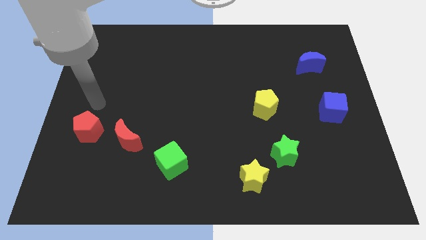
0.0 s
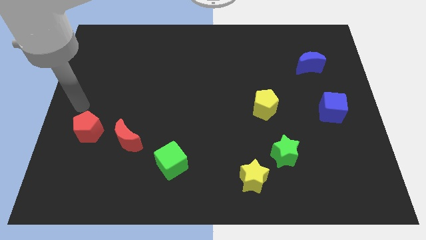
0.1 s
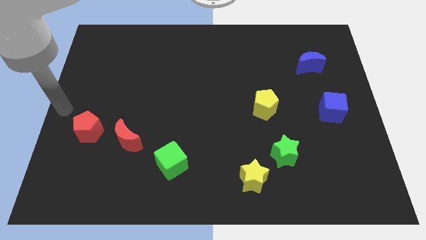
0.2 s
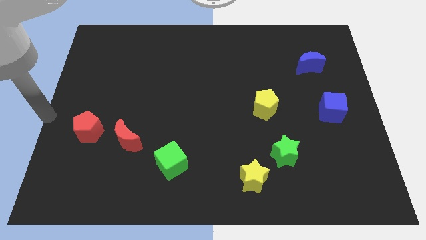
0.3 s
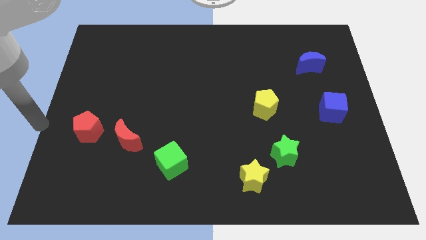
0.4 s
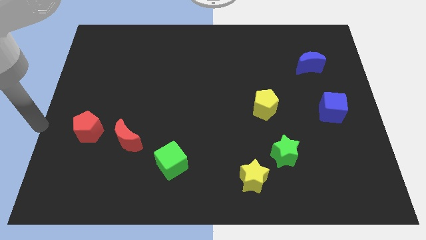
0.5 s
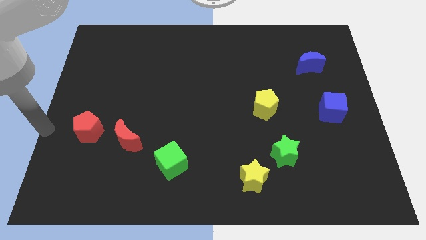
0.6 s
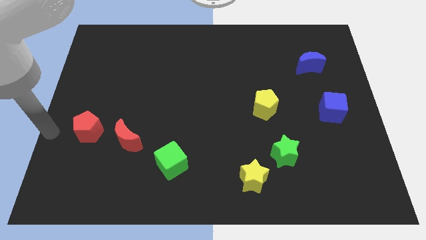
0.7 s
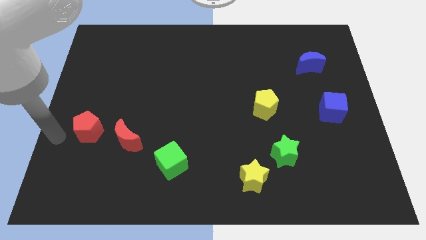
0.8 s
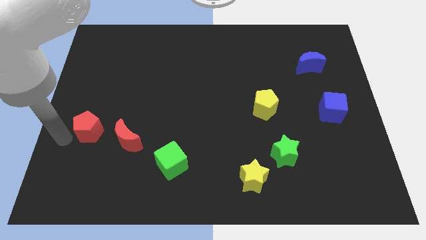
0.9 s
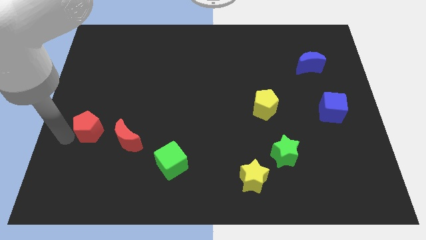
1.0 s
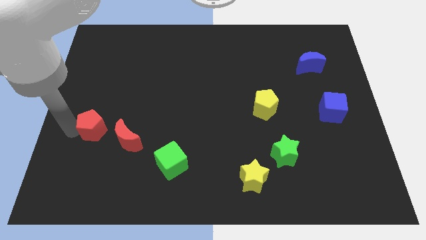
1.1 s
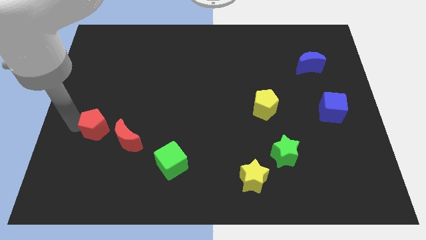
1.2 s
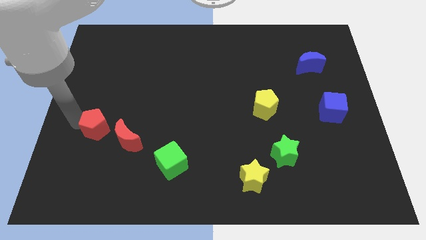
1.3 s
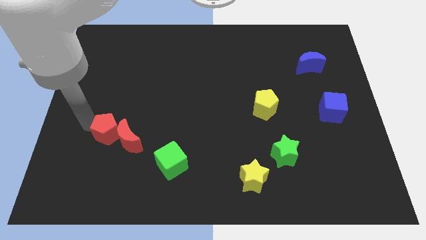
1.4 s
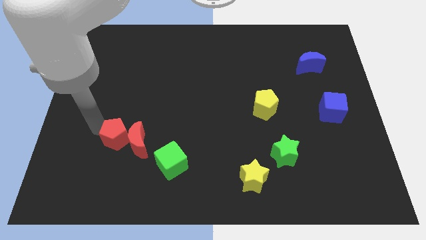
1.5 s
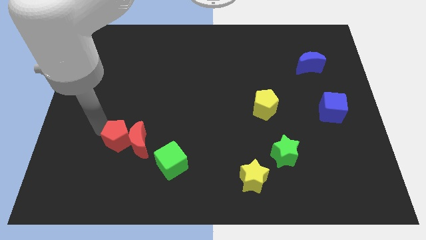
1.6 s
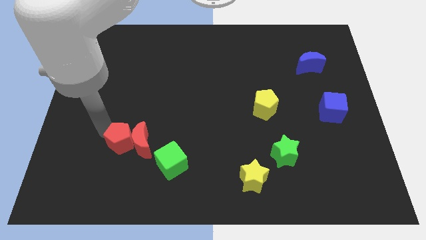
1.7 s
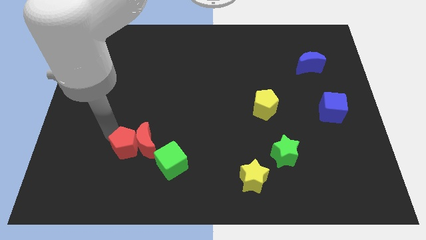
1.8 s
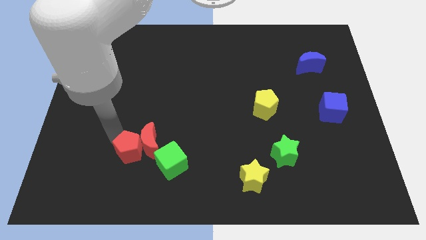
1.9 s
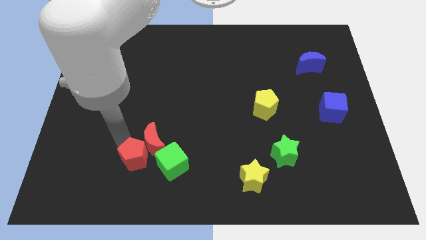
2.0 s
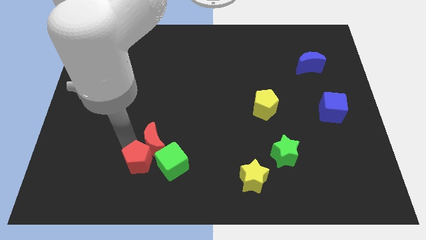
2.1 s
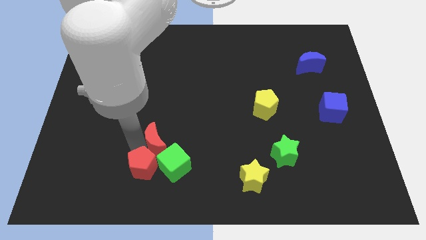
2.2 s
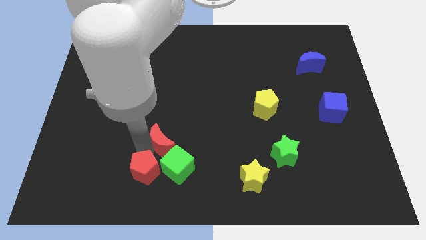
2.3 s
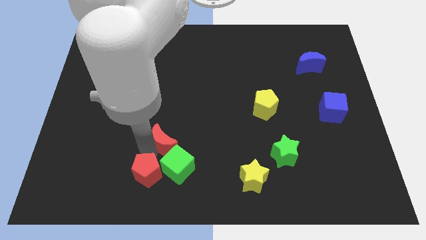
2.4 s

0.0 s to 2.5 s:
push the red pentagon close left to the green cube along with the red crescent

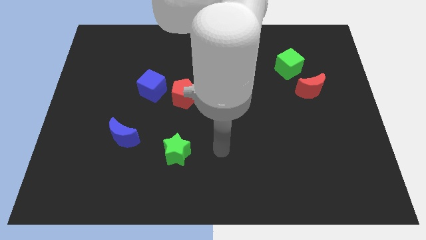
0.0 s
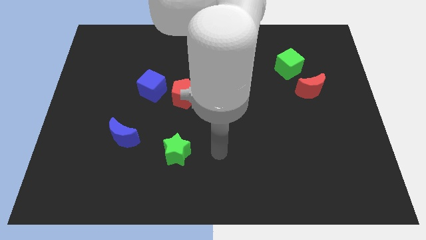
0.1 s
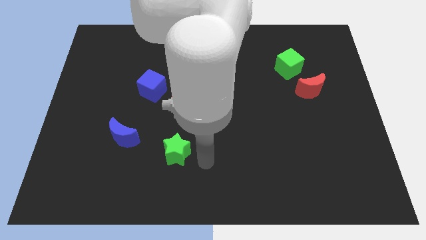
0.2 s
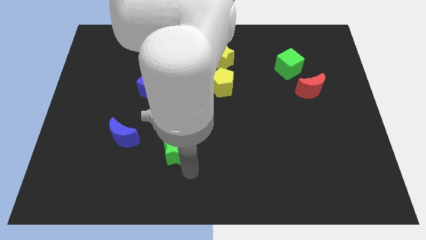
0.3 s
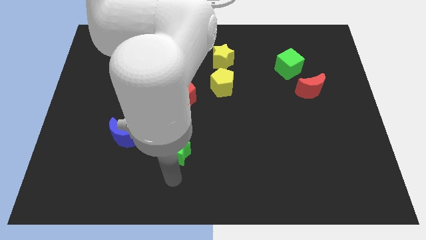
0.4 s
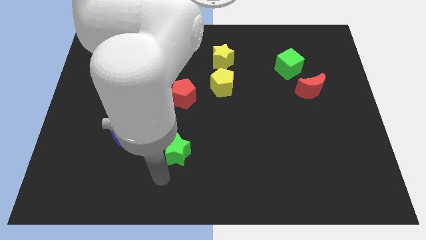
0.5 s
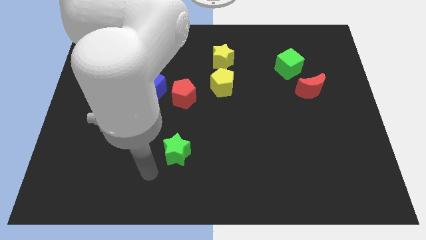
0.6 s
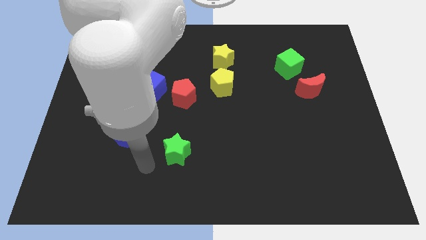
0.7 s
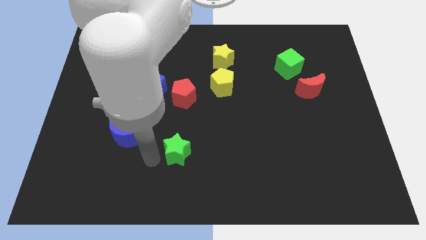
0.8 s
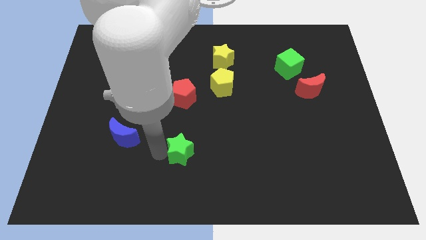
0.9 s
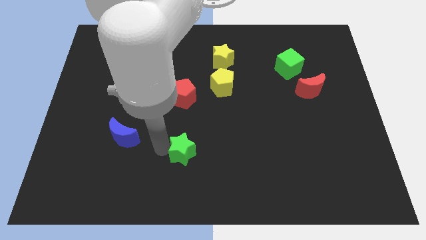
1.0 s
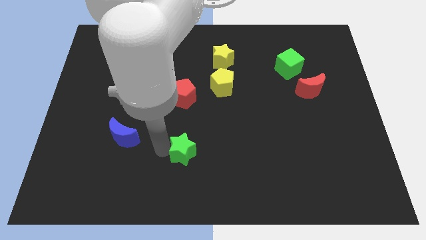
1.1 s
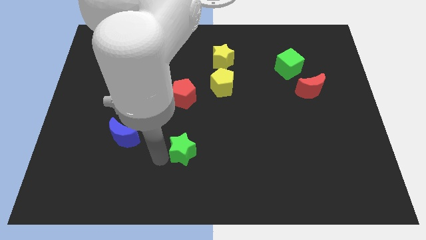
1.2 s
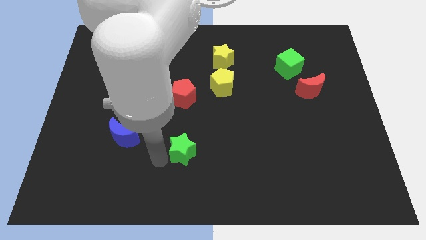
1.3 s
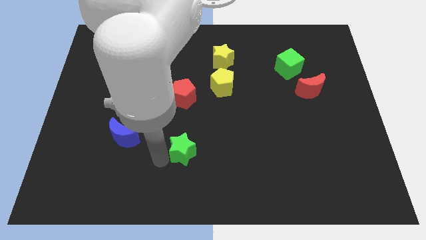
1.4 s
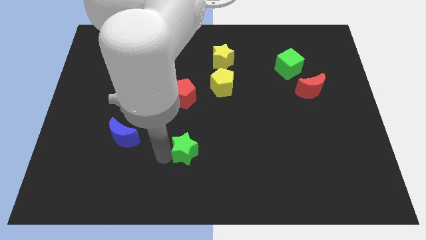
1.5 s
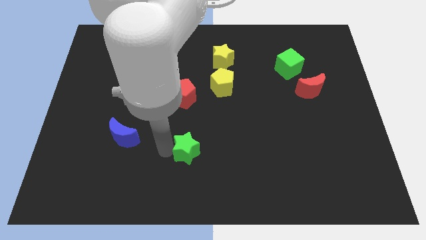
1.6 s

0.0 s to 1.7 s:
move the arm into the green star

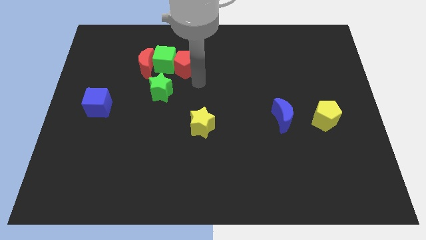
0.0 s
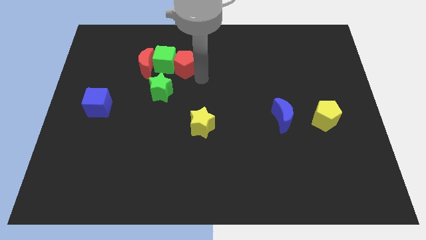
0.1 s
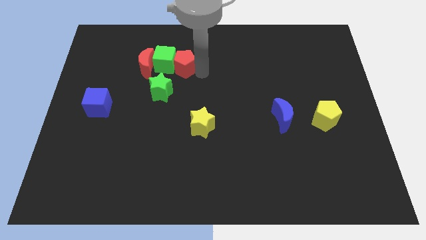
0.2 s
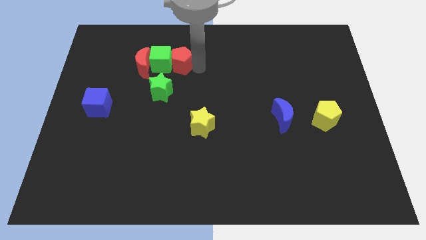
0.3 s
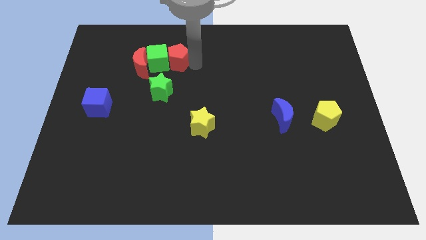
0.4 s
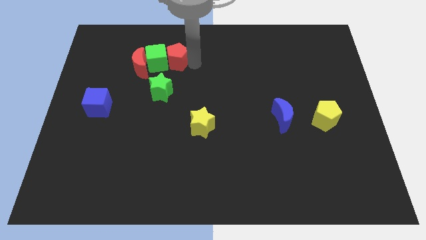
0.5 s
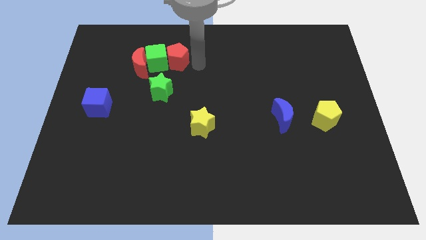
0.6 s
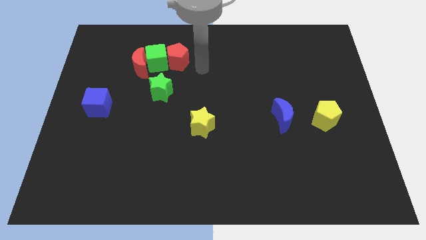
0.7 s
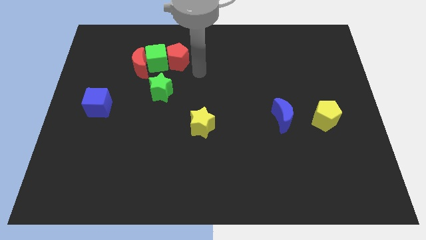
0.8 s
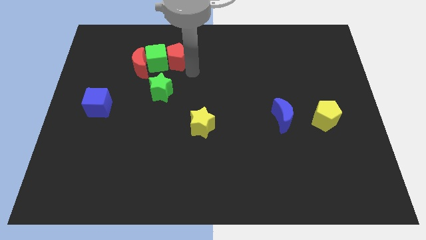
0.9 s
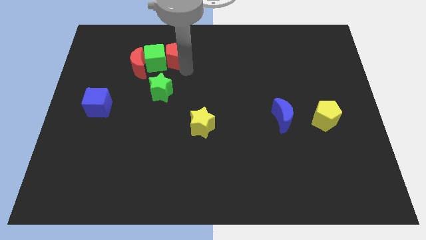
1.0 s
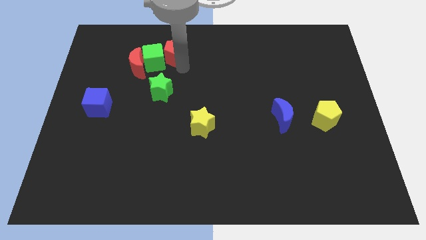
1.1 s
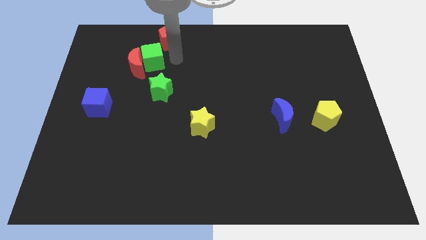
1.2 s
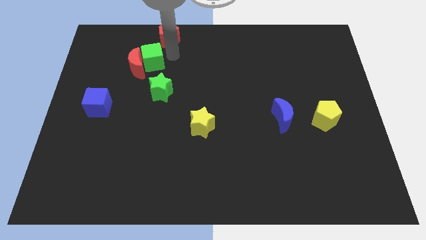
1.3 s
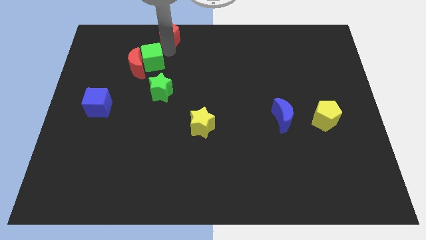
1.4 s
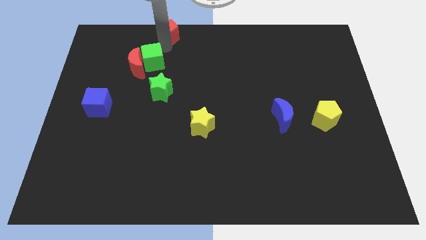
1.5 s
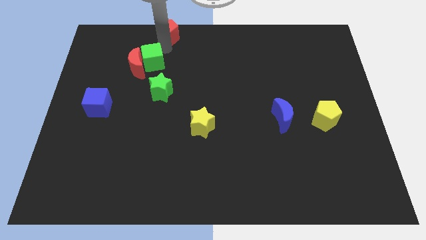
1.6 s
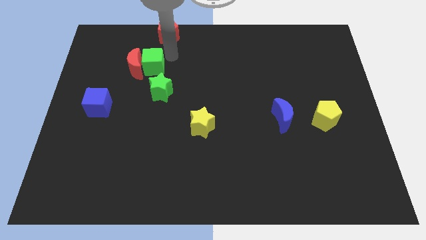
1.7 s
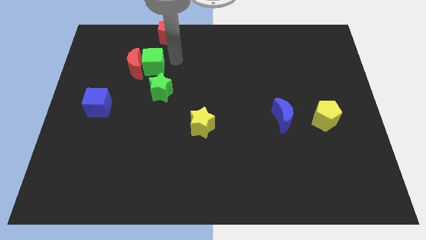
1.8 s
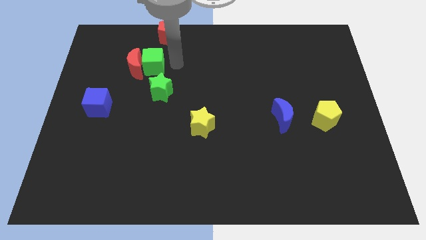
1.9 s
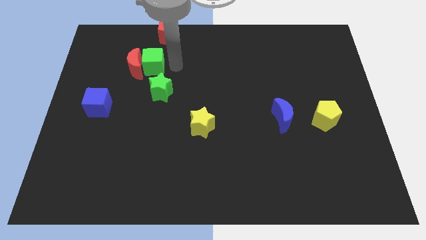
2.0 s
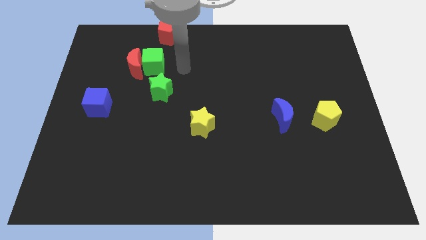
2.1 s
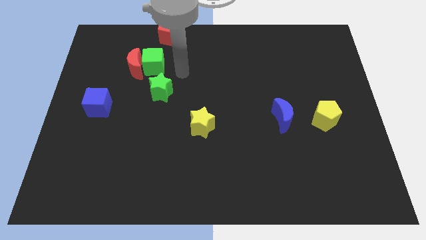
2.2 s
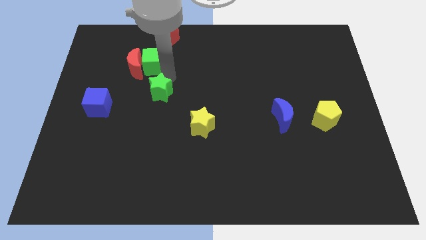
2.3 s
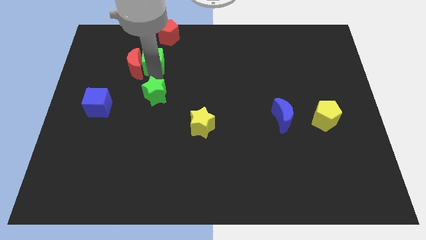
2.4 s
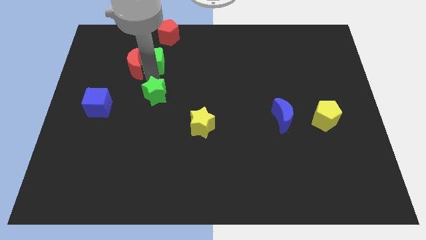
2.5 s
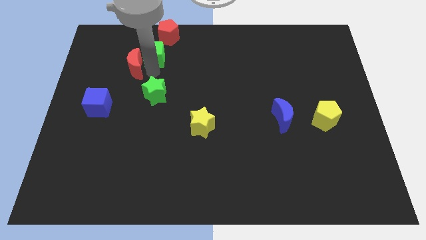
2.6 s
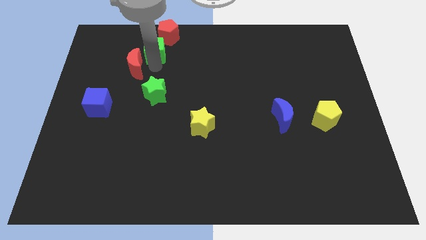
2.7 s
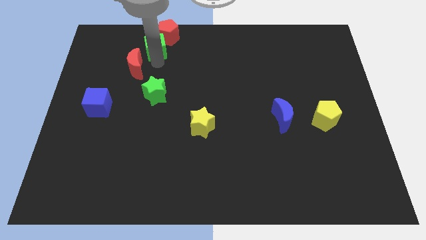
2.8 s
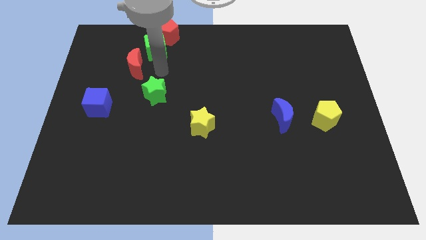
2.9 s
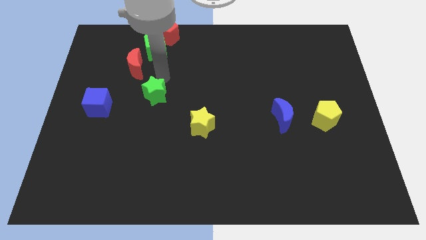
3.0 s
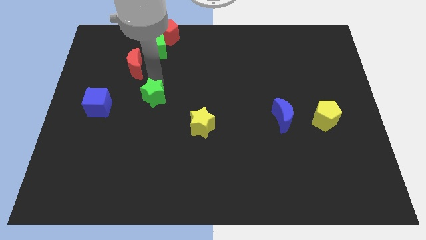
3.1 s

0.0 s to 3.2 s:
push red pentagon to the top of the board

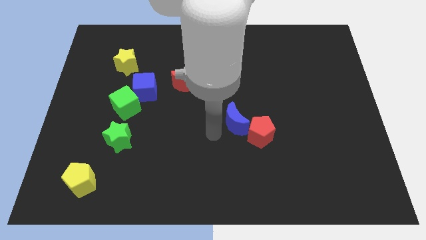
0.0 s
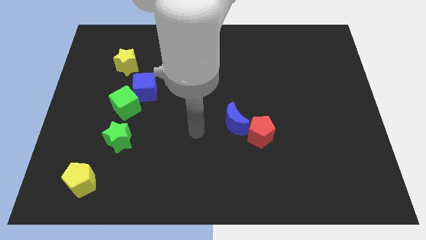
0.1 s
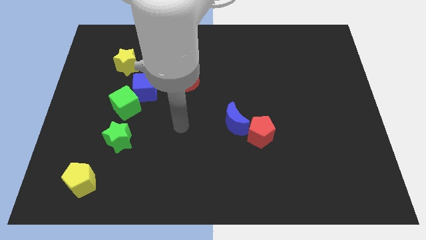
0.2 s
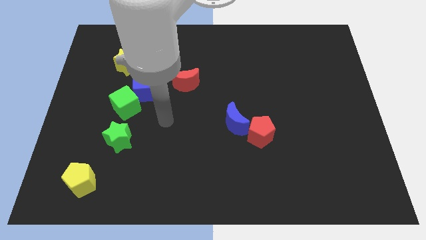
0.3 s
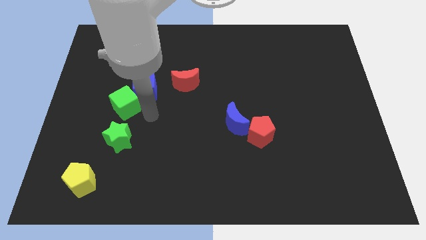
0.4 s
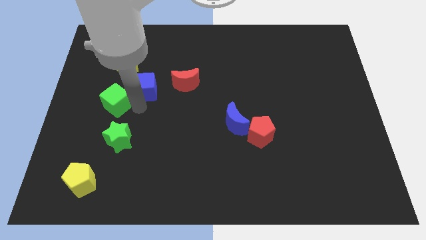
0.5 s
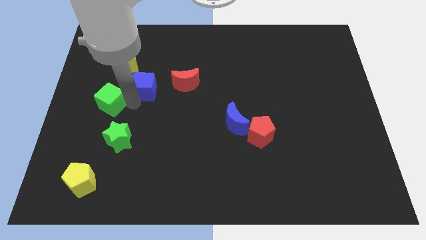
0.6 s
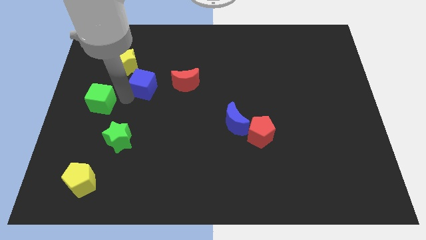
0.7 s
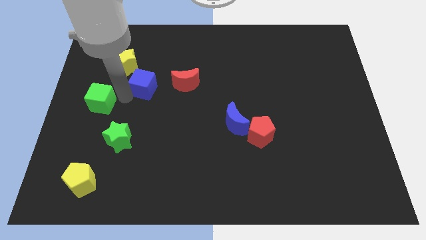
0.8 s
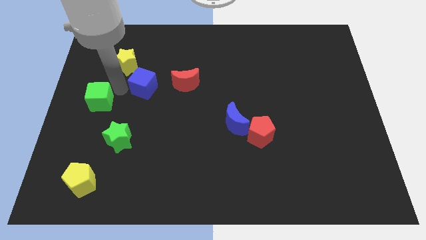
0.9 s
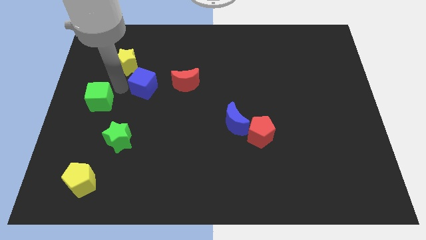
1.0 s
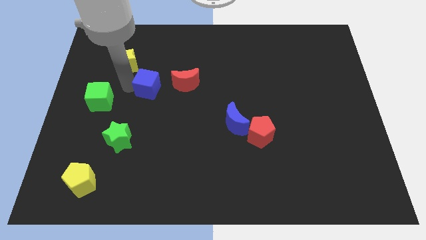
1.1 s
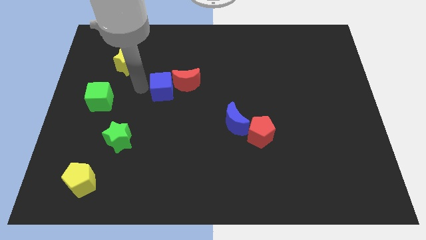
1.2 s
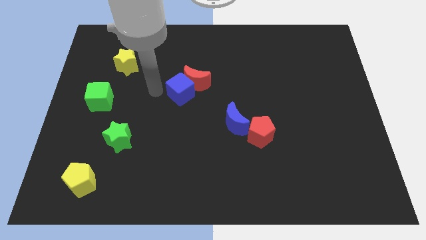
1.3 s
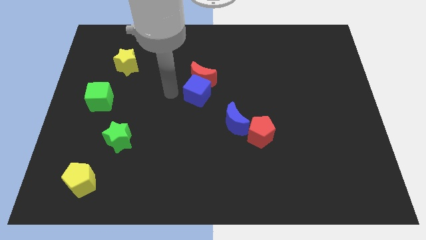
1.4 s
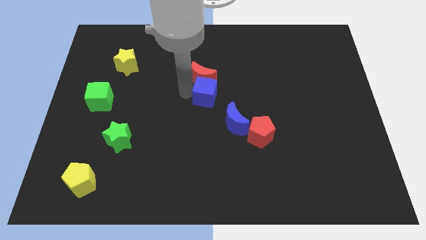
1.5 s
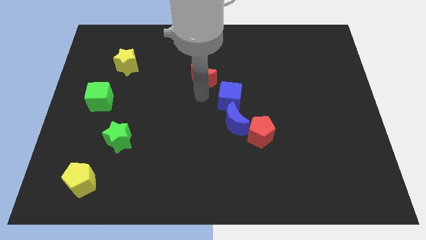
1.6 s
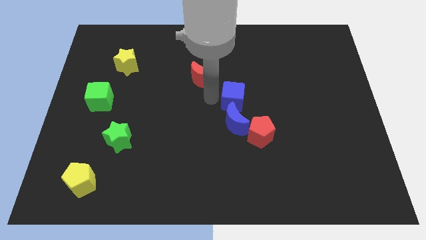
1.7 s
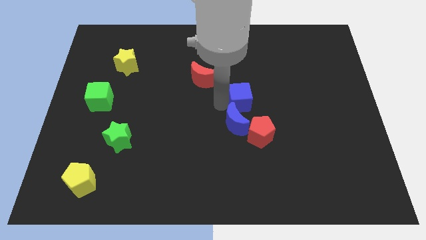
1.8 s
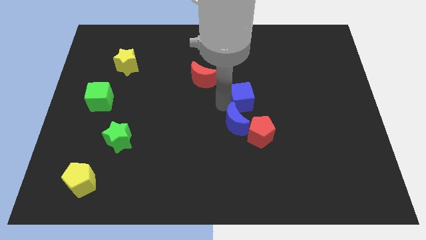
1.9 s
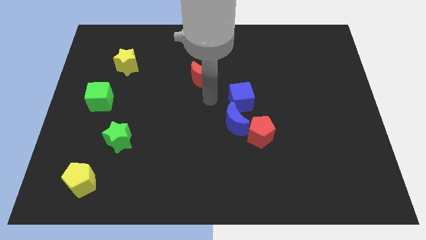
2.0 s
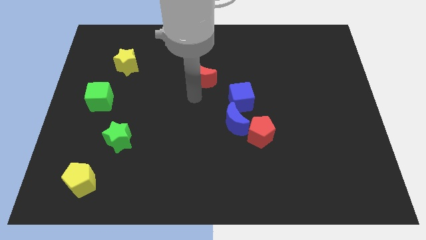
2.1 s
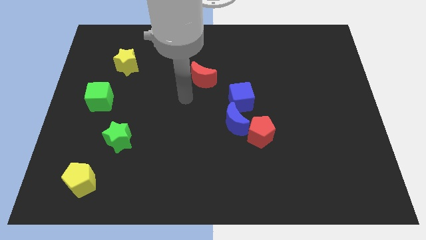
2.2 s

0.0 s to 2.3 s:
separate blue cube from red crescent and green cube
